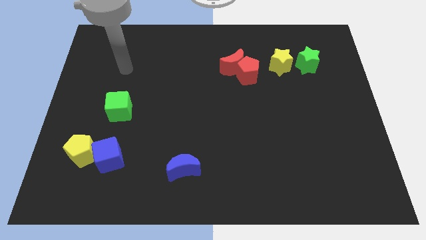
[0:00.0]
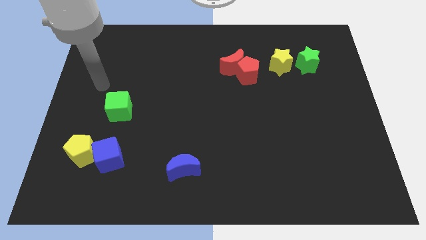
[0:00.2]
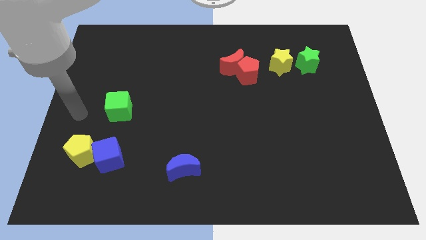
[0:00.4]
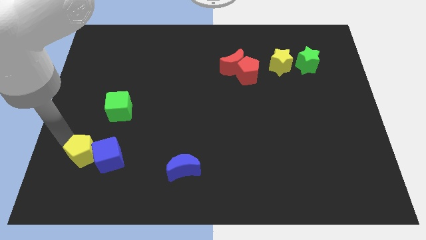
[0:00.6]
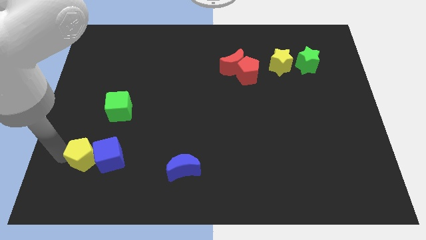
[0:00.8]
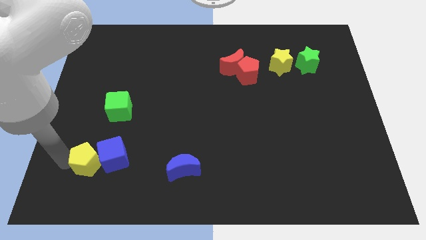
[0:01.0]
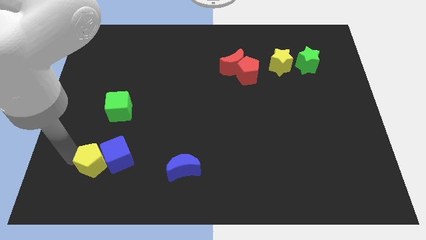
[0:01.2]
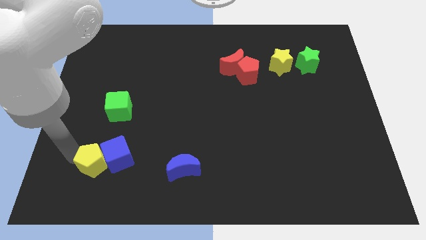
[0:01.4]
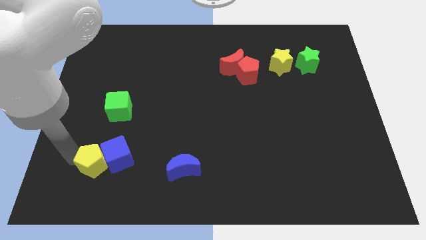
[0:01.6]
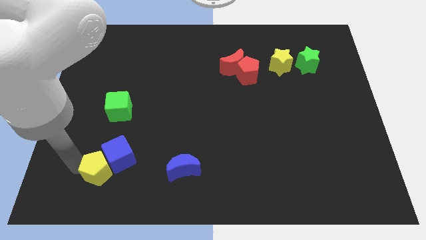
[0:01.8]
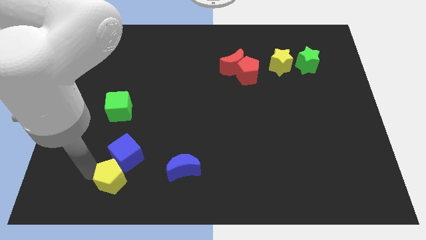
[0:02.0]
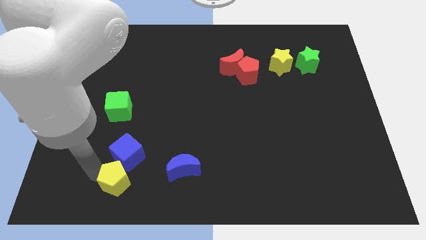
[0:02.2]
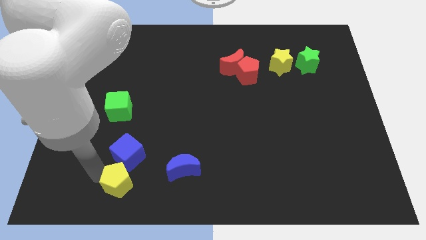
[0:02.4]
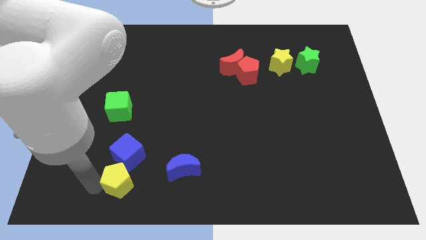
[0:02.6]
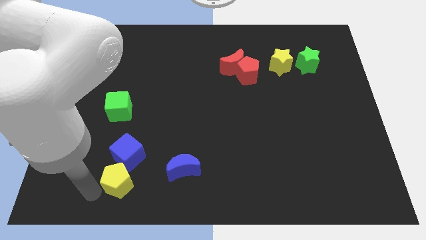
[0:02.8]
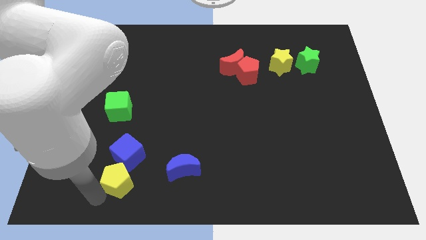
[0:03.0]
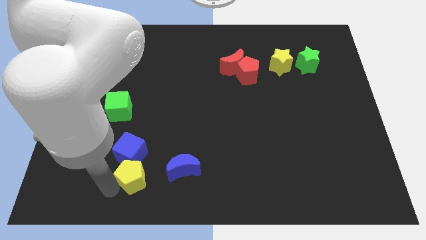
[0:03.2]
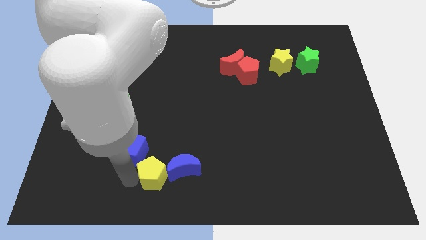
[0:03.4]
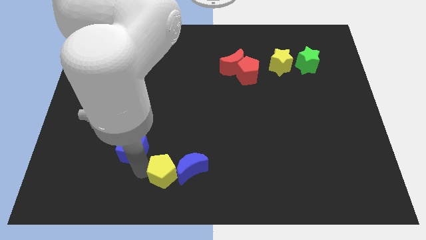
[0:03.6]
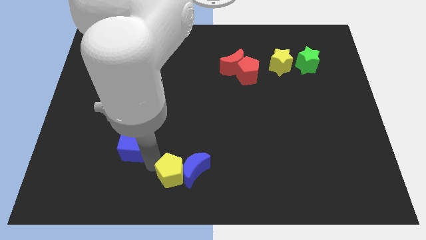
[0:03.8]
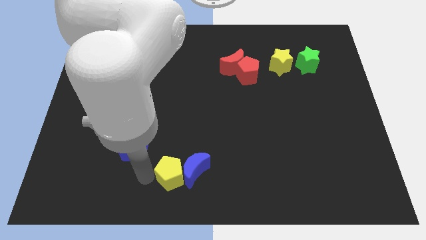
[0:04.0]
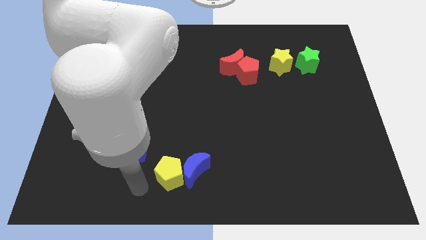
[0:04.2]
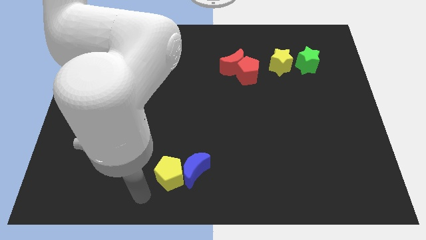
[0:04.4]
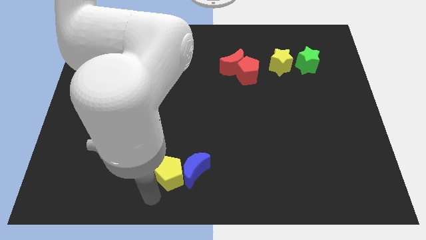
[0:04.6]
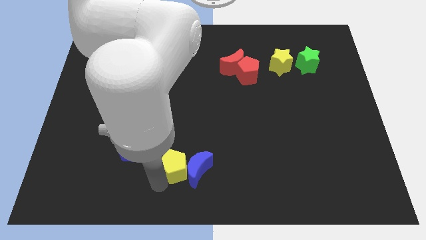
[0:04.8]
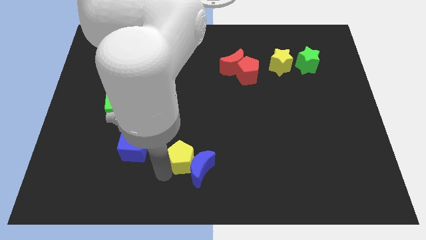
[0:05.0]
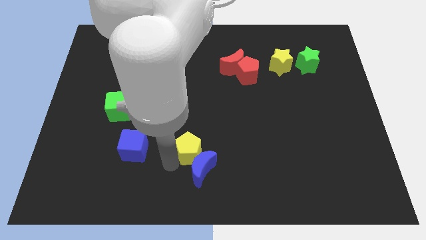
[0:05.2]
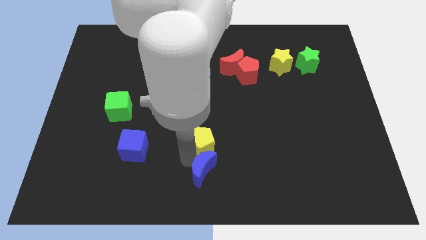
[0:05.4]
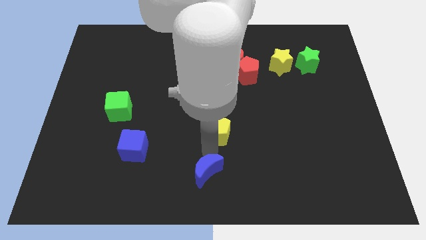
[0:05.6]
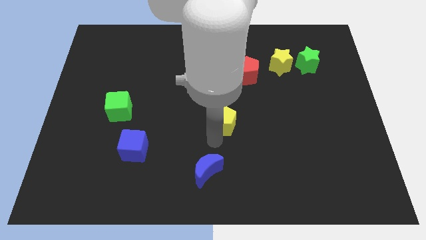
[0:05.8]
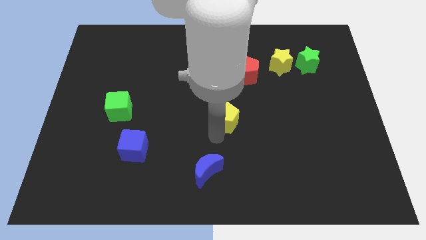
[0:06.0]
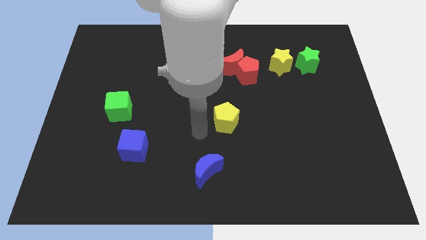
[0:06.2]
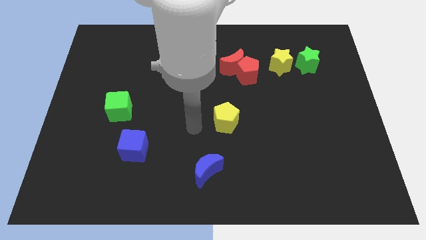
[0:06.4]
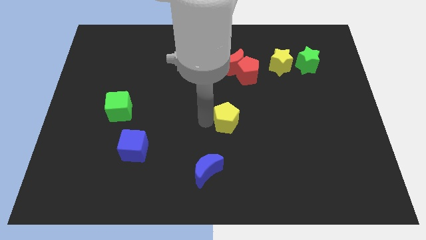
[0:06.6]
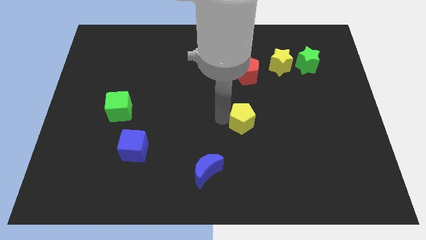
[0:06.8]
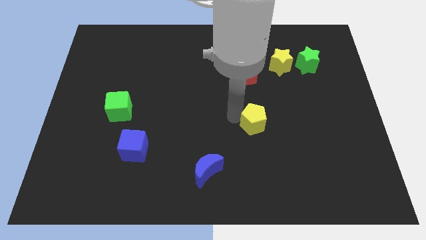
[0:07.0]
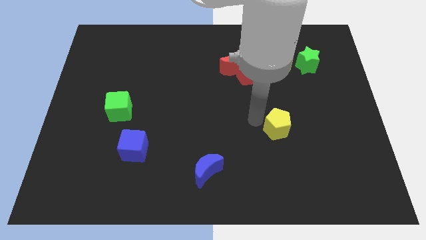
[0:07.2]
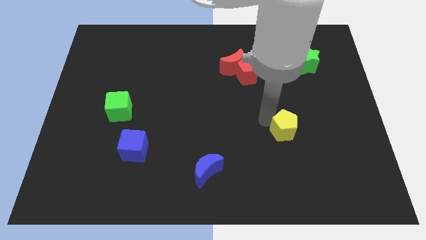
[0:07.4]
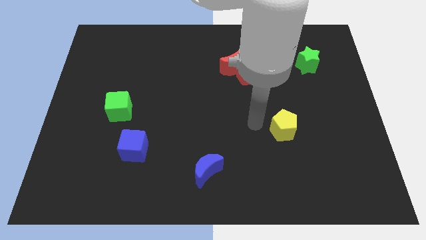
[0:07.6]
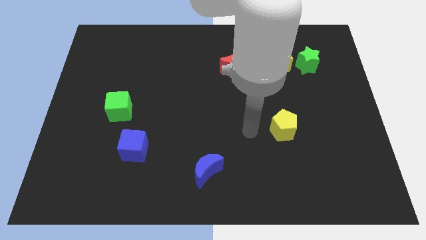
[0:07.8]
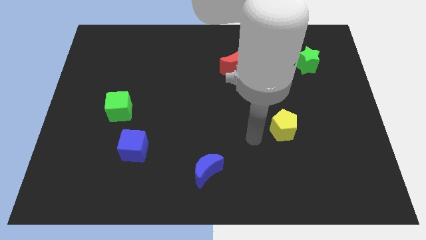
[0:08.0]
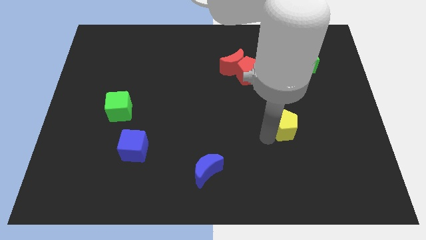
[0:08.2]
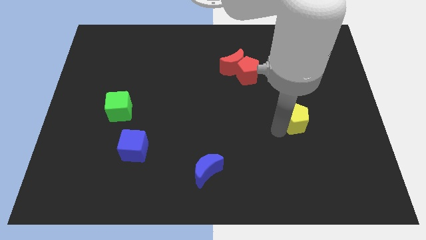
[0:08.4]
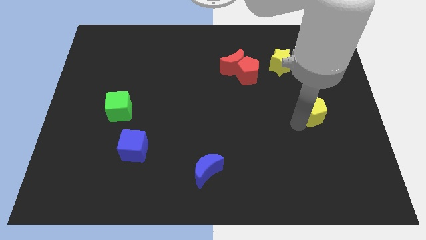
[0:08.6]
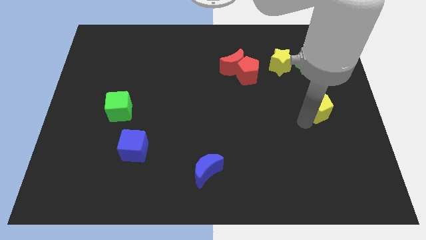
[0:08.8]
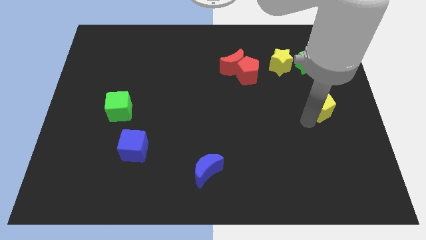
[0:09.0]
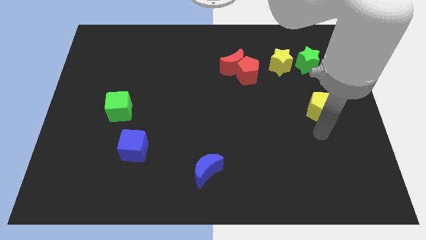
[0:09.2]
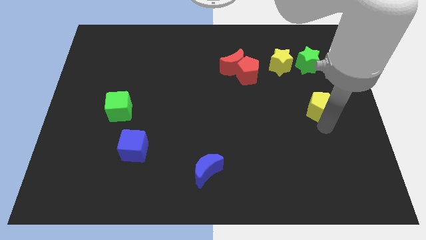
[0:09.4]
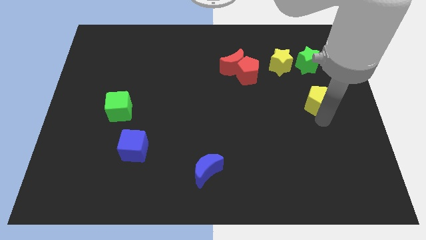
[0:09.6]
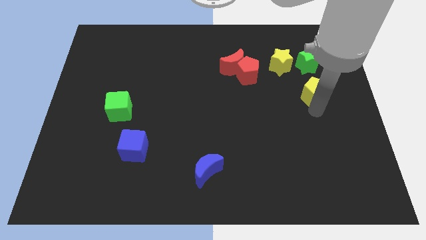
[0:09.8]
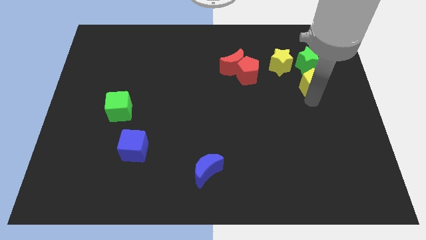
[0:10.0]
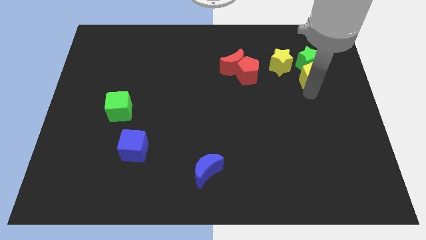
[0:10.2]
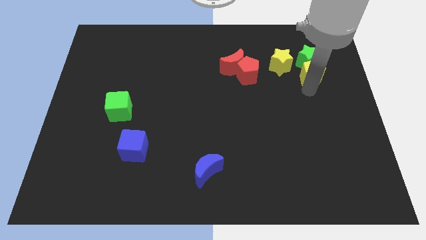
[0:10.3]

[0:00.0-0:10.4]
push the yellow pentagon towards the green star

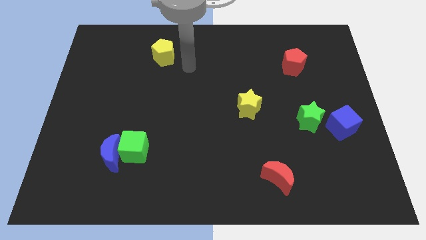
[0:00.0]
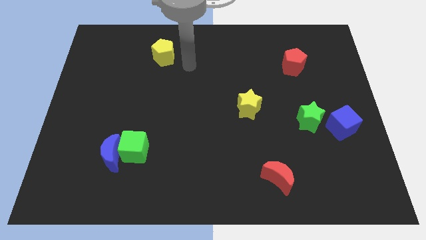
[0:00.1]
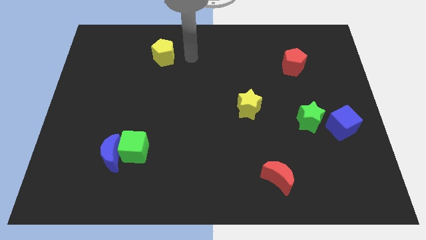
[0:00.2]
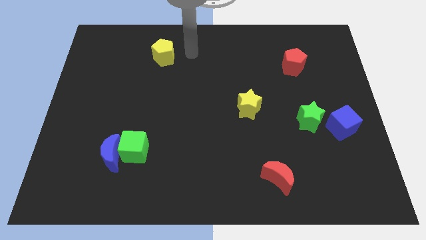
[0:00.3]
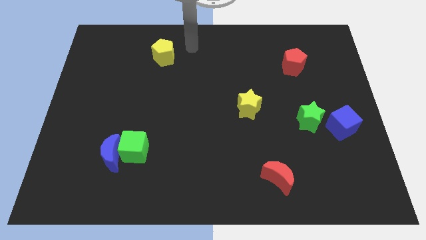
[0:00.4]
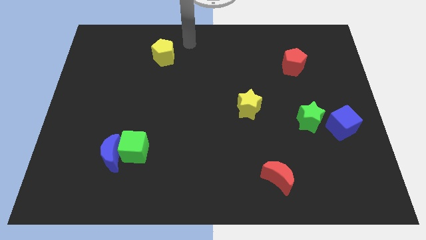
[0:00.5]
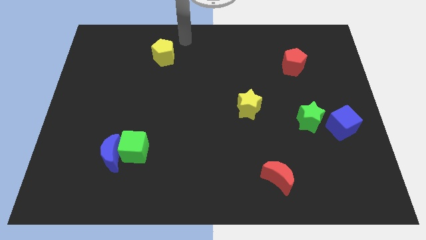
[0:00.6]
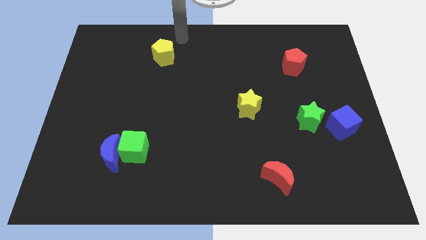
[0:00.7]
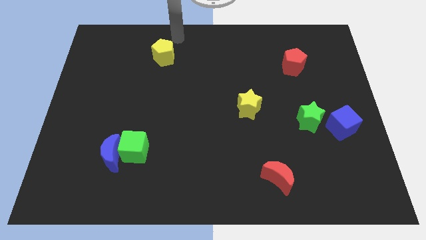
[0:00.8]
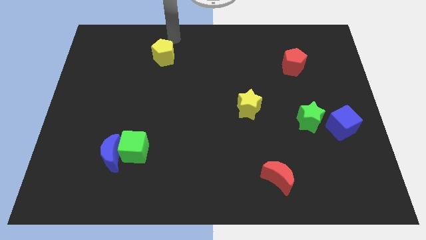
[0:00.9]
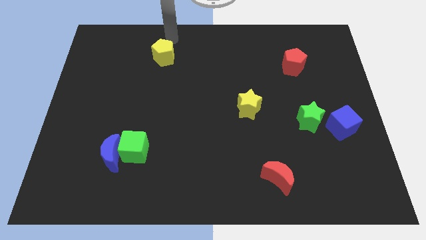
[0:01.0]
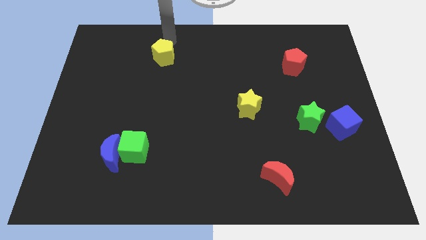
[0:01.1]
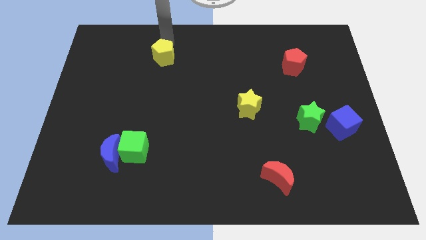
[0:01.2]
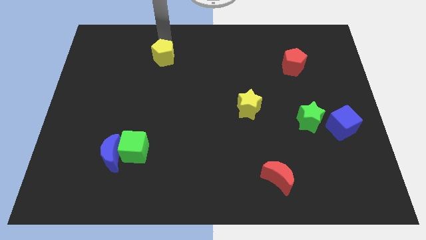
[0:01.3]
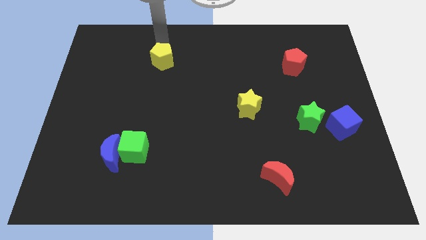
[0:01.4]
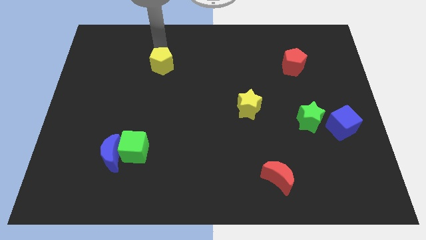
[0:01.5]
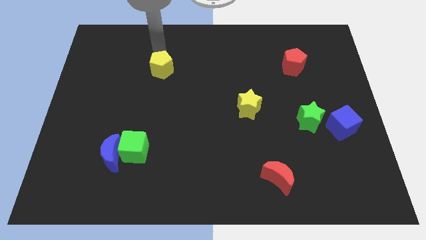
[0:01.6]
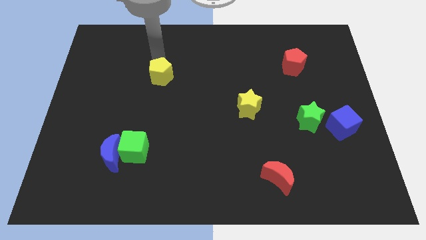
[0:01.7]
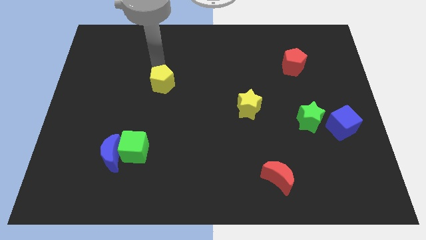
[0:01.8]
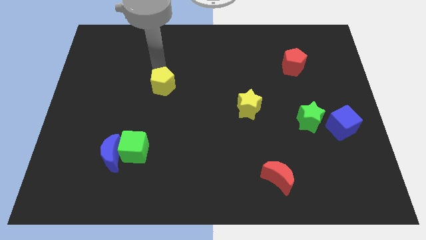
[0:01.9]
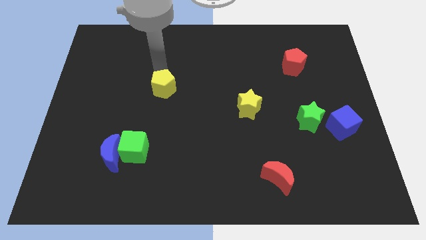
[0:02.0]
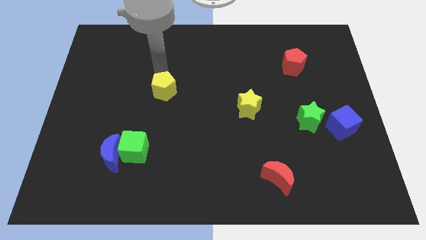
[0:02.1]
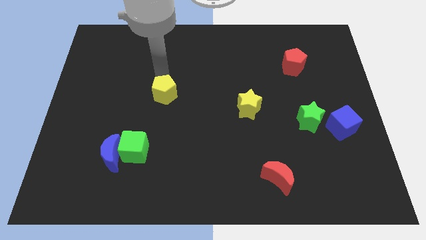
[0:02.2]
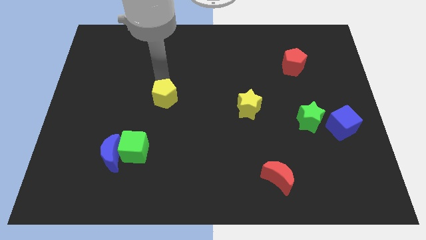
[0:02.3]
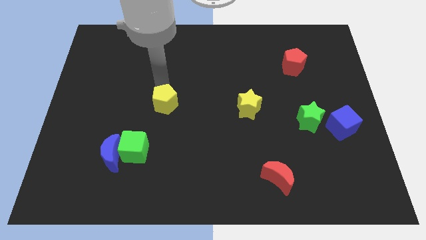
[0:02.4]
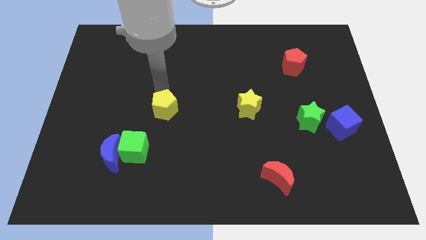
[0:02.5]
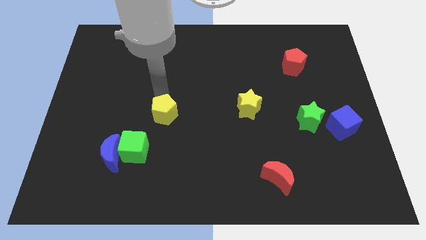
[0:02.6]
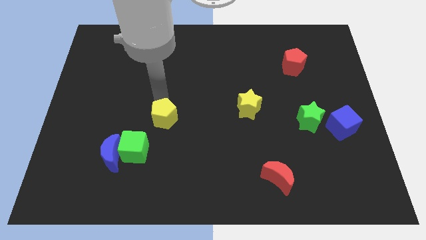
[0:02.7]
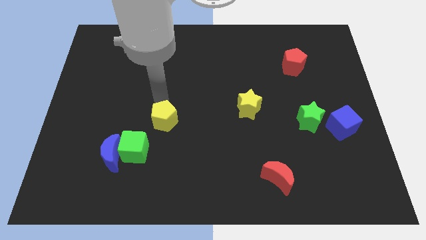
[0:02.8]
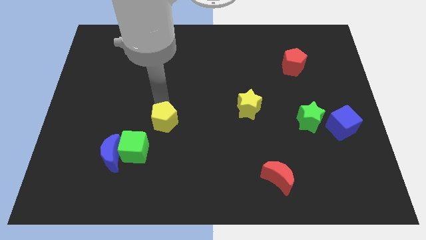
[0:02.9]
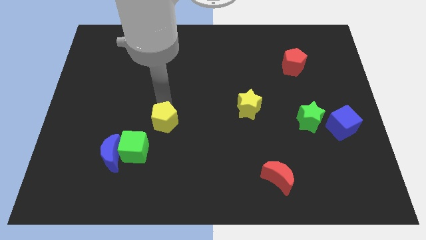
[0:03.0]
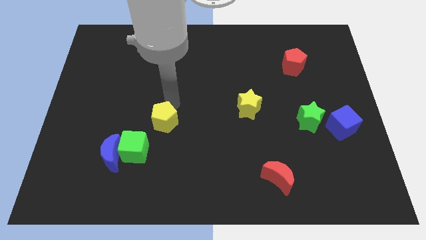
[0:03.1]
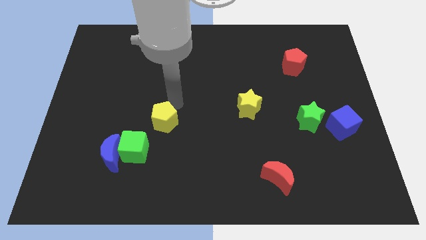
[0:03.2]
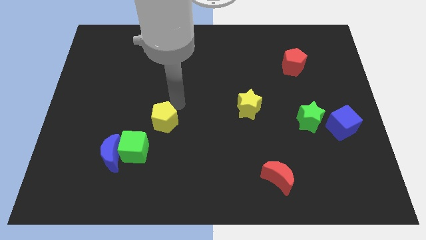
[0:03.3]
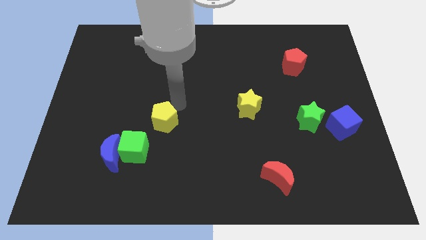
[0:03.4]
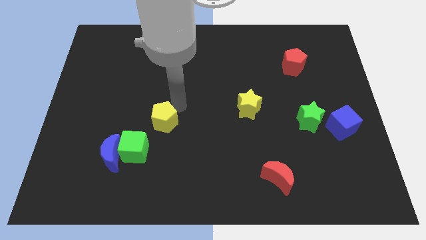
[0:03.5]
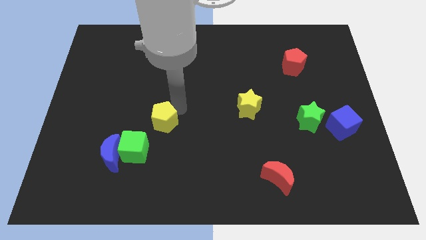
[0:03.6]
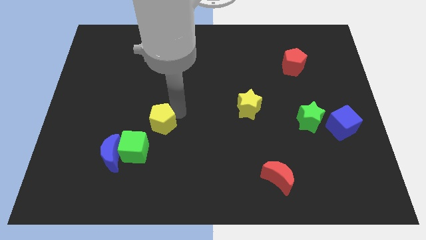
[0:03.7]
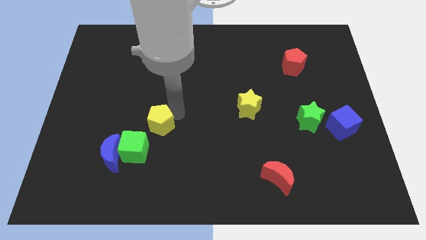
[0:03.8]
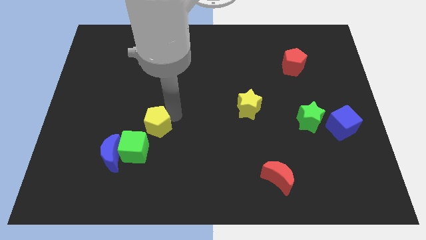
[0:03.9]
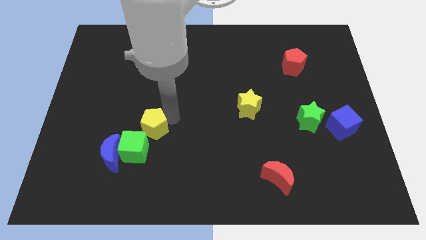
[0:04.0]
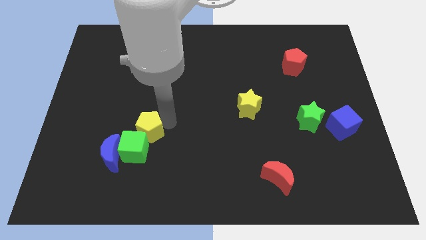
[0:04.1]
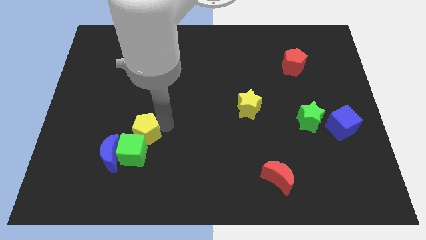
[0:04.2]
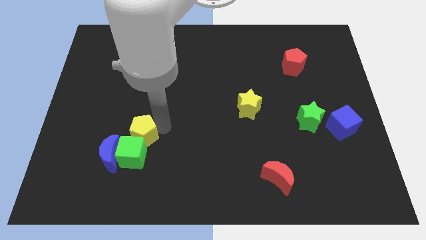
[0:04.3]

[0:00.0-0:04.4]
put the yellow pentagon next to the green cube
